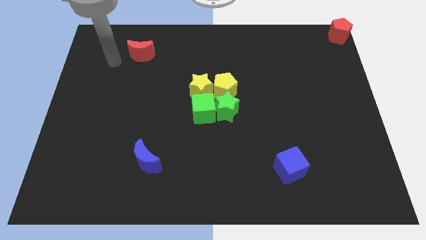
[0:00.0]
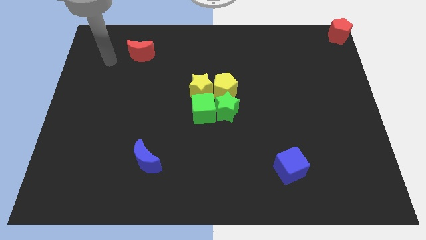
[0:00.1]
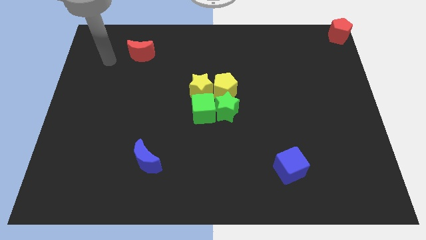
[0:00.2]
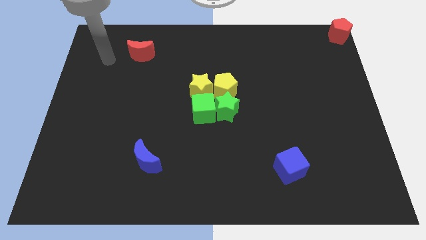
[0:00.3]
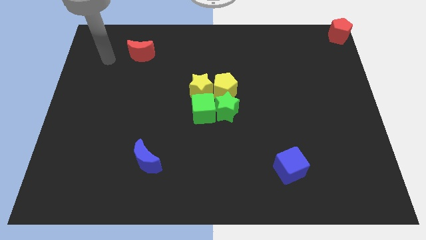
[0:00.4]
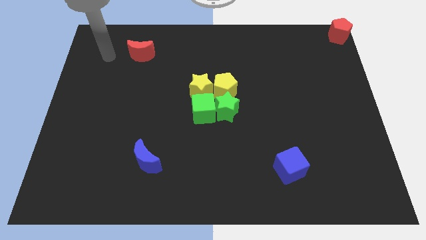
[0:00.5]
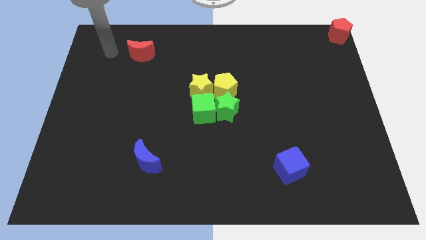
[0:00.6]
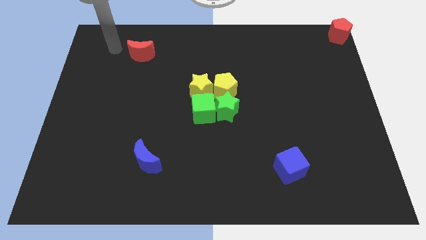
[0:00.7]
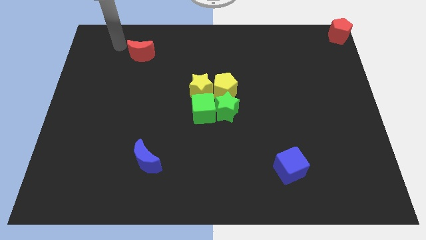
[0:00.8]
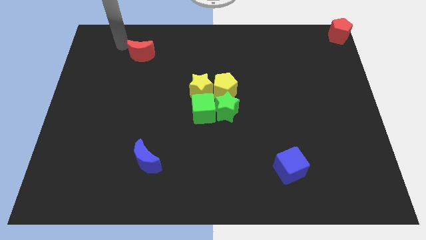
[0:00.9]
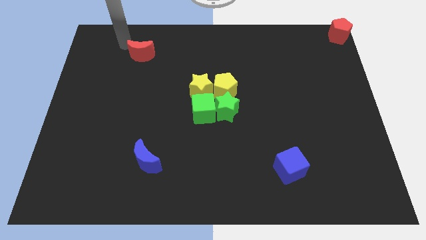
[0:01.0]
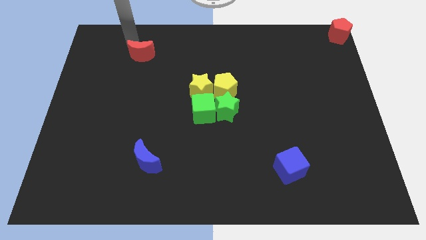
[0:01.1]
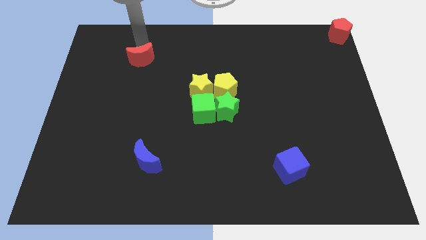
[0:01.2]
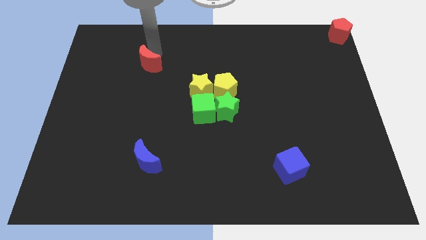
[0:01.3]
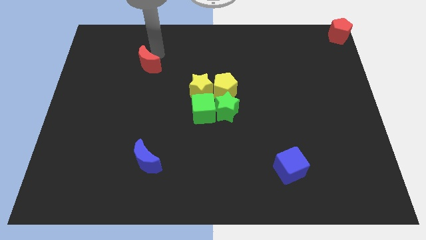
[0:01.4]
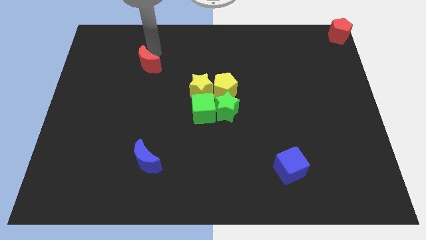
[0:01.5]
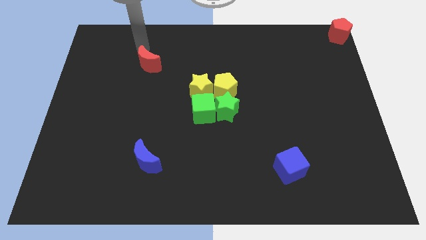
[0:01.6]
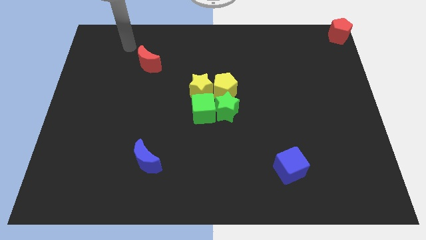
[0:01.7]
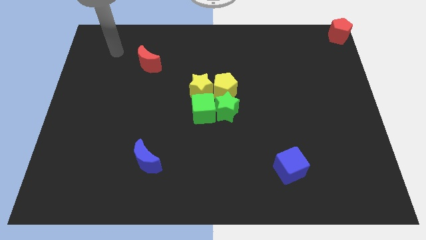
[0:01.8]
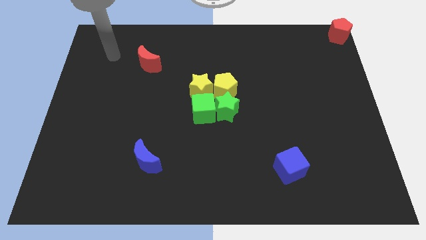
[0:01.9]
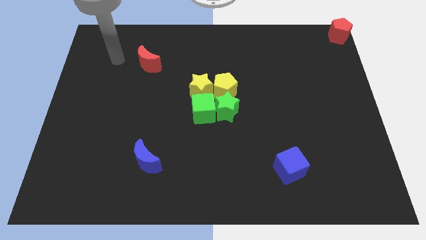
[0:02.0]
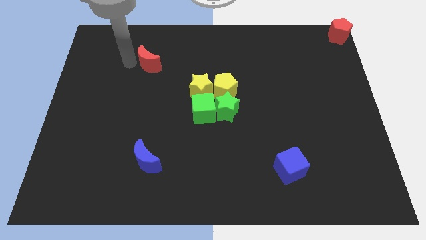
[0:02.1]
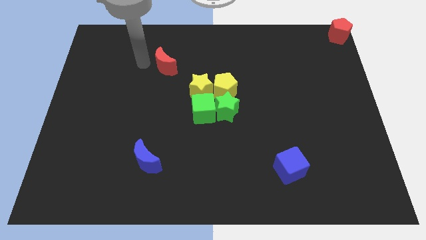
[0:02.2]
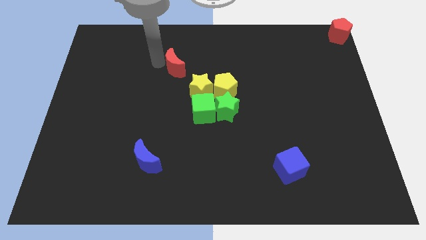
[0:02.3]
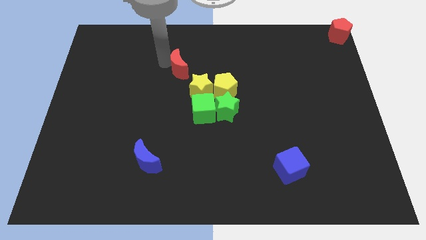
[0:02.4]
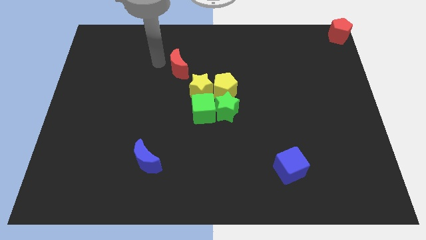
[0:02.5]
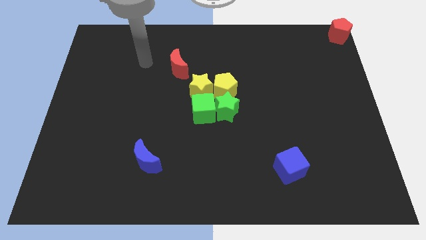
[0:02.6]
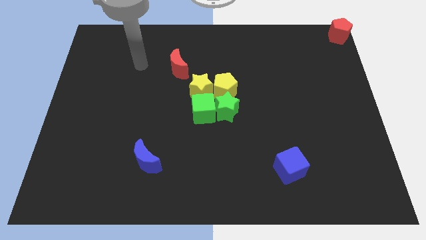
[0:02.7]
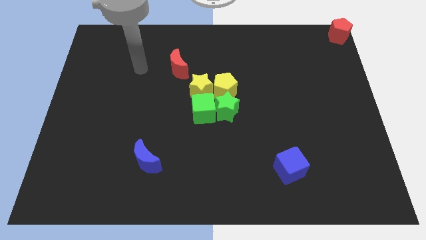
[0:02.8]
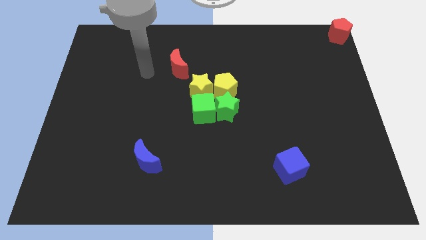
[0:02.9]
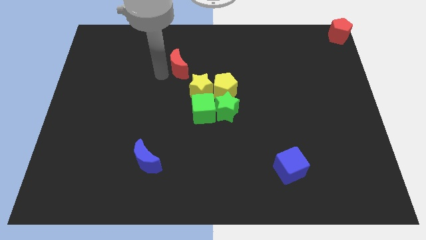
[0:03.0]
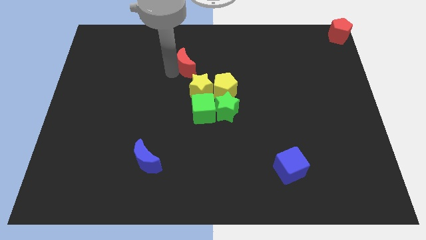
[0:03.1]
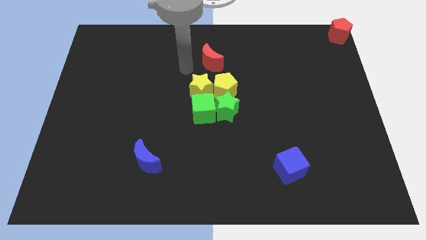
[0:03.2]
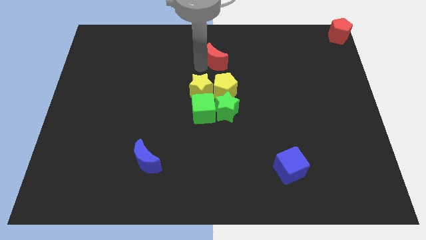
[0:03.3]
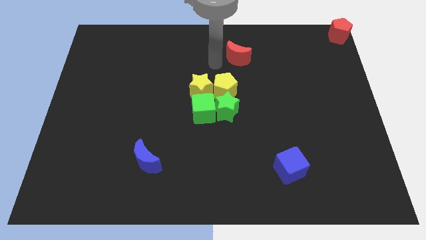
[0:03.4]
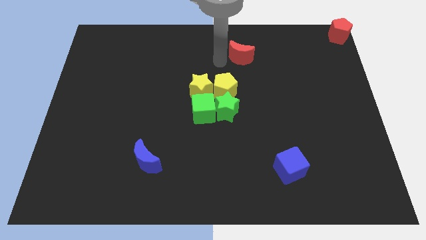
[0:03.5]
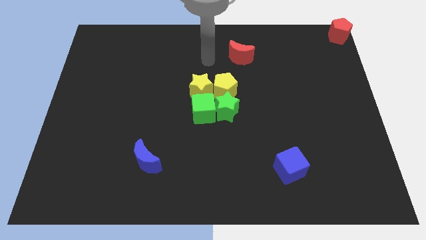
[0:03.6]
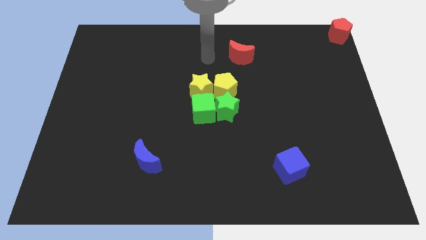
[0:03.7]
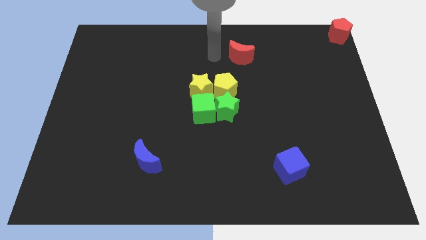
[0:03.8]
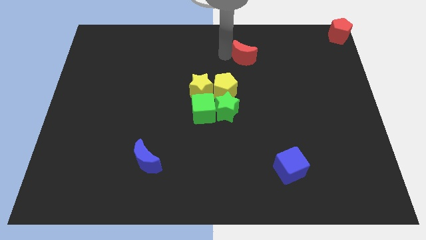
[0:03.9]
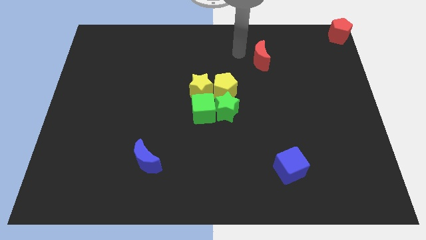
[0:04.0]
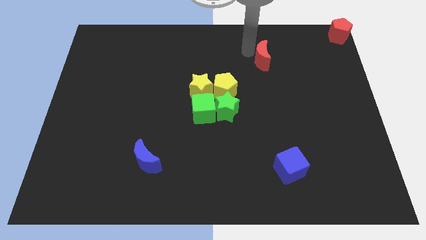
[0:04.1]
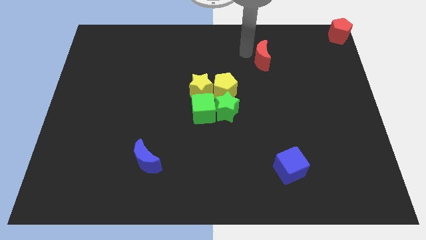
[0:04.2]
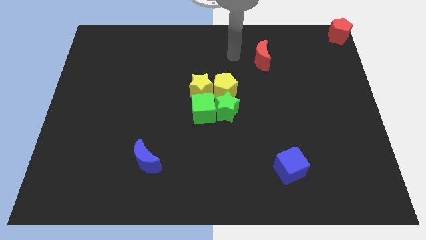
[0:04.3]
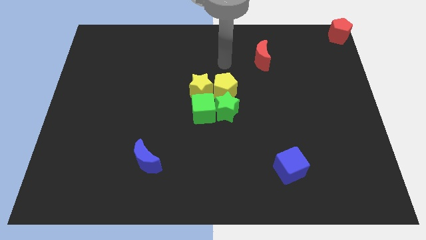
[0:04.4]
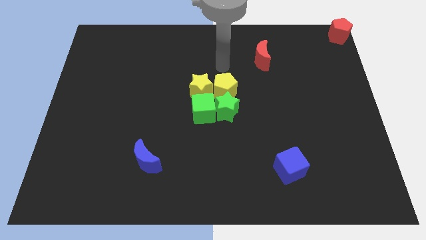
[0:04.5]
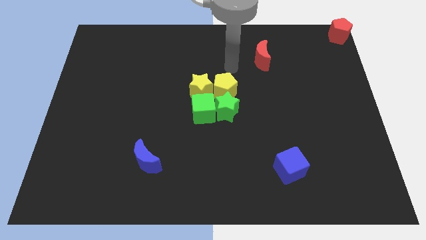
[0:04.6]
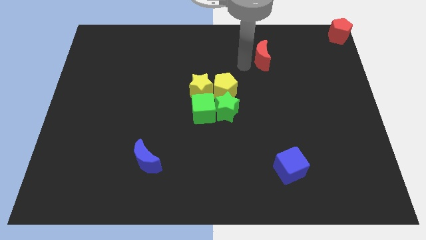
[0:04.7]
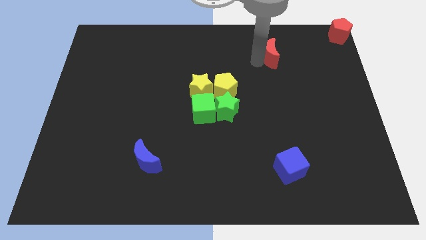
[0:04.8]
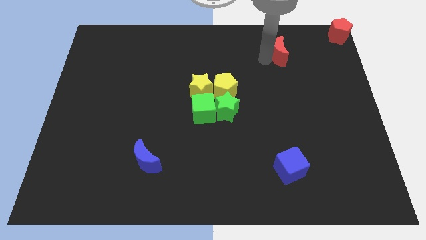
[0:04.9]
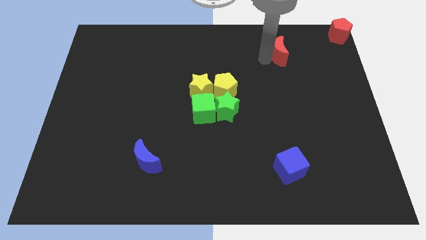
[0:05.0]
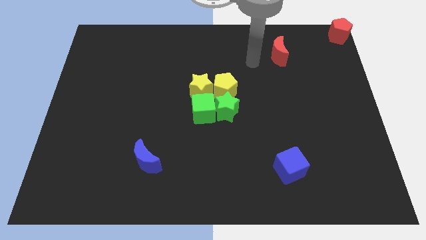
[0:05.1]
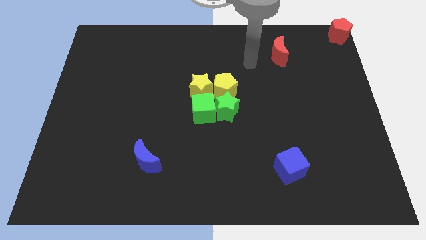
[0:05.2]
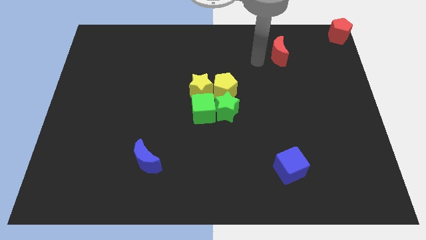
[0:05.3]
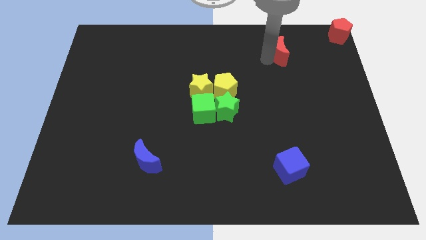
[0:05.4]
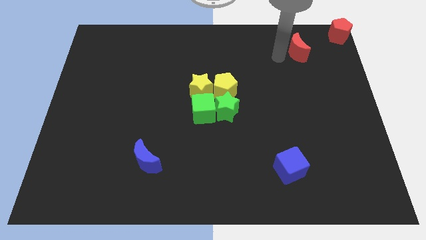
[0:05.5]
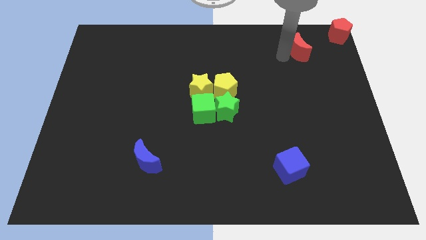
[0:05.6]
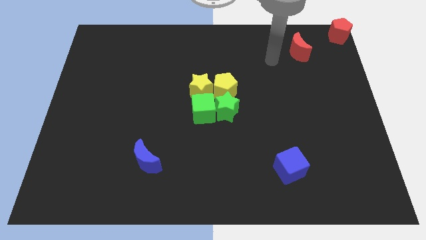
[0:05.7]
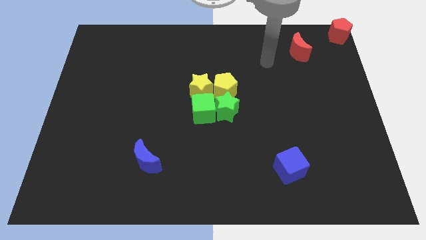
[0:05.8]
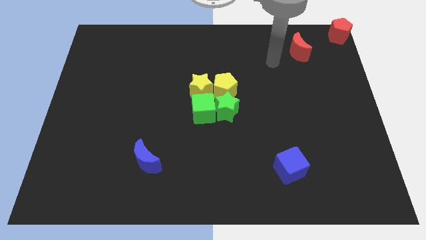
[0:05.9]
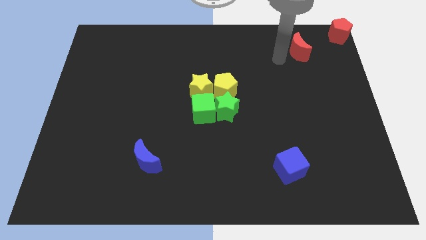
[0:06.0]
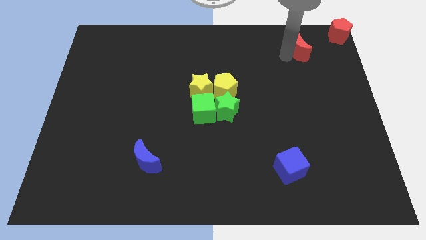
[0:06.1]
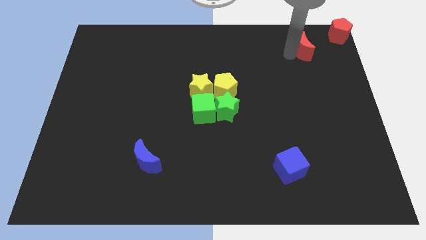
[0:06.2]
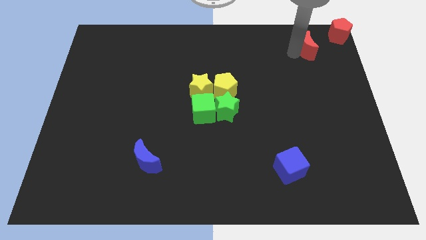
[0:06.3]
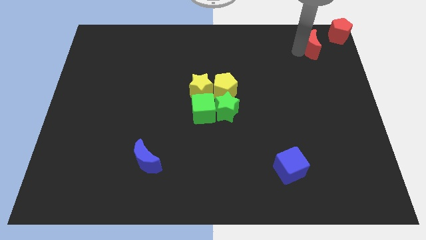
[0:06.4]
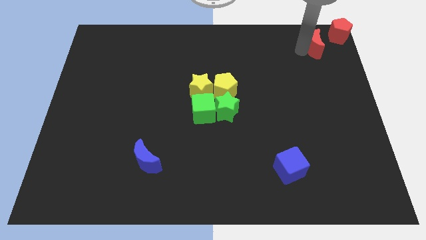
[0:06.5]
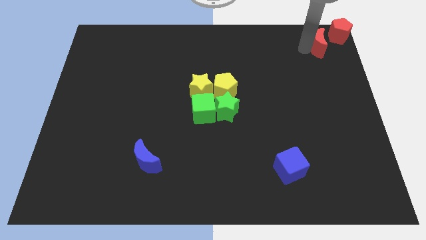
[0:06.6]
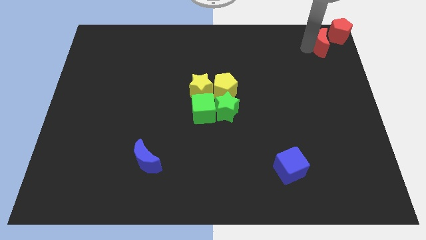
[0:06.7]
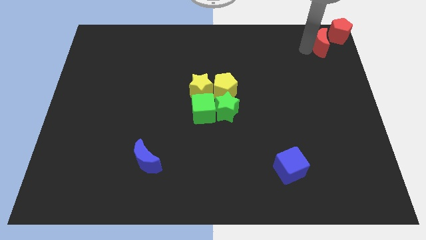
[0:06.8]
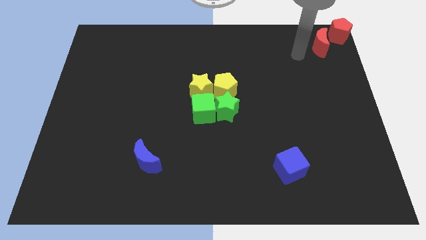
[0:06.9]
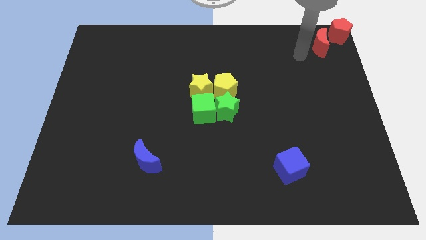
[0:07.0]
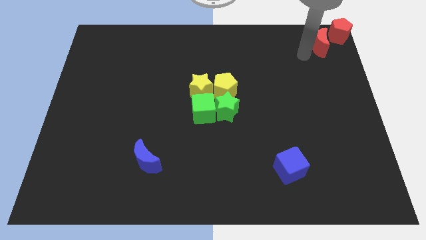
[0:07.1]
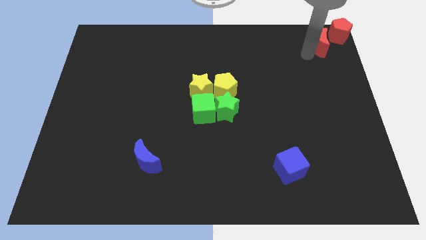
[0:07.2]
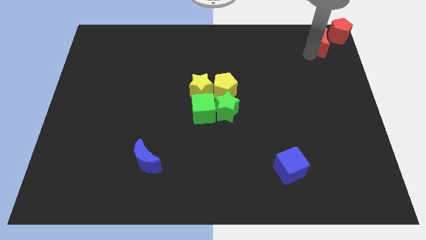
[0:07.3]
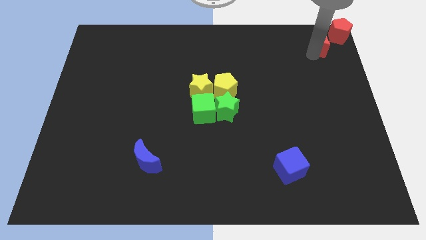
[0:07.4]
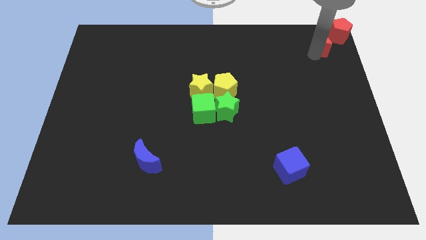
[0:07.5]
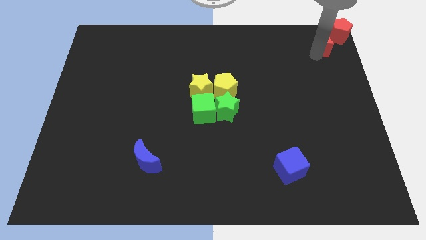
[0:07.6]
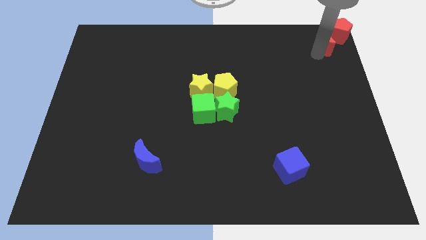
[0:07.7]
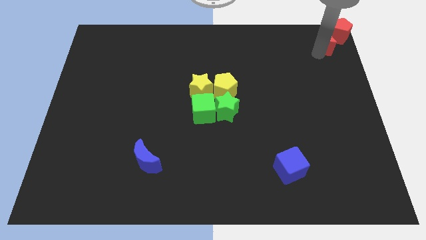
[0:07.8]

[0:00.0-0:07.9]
push the red crescent to the top right corner of the board

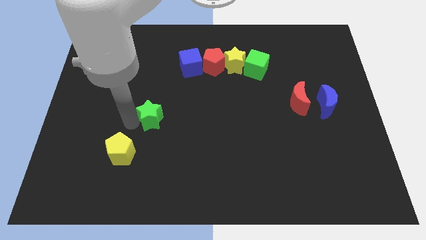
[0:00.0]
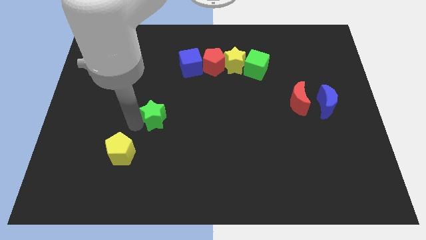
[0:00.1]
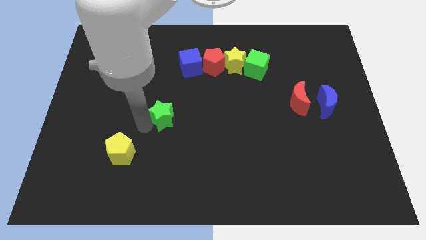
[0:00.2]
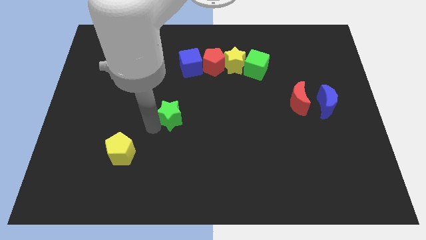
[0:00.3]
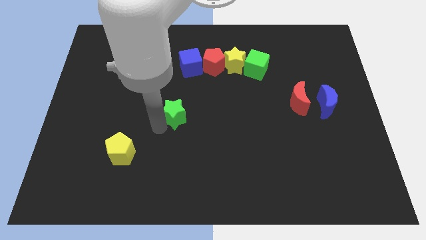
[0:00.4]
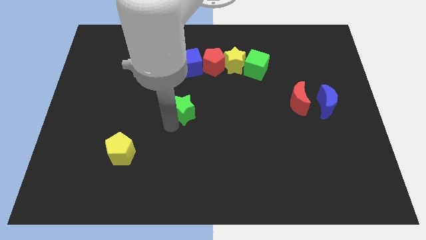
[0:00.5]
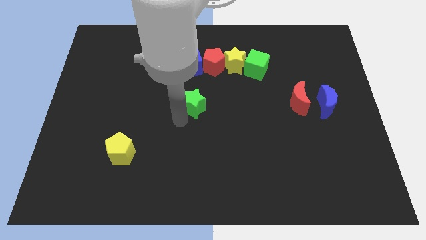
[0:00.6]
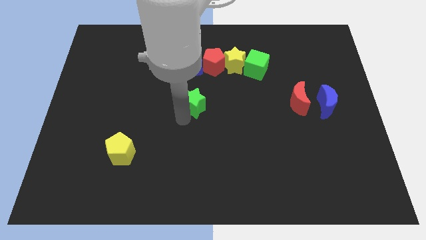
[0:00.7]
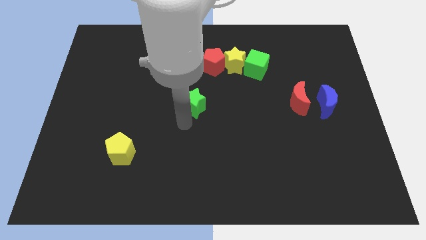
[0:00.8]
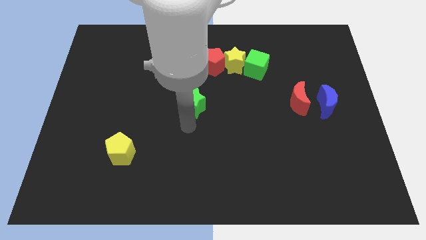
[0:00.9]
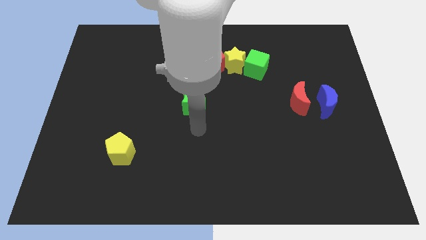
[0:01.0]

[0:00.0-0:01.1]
move green star to the top center of the board
